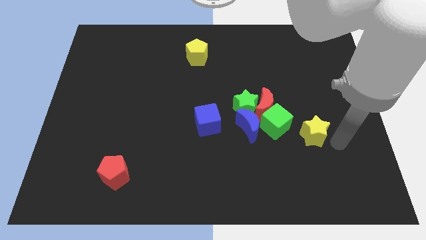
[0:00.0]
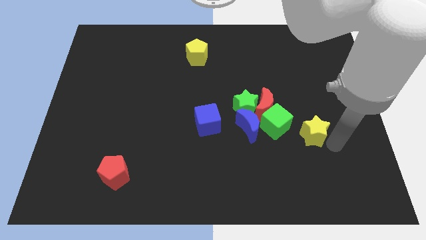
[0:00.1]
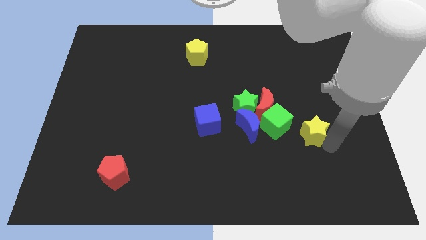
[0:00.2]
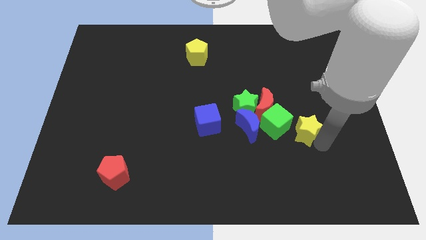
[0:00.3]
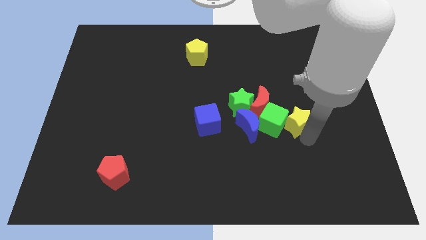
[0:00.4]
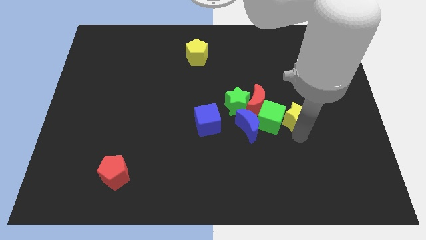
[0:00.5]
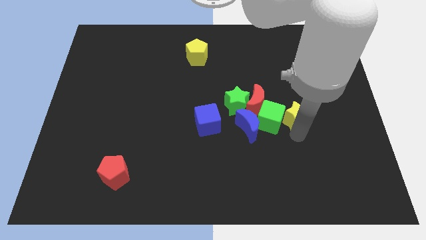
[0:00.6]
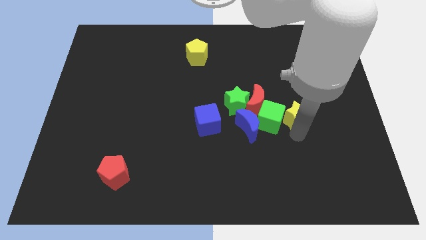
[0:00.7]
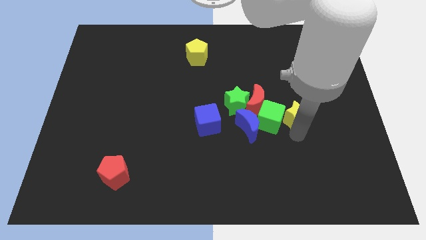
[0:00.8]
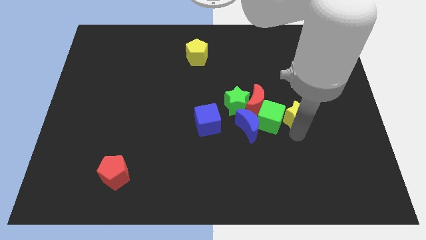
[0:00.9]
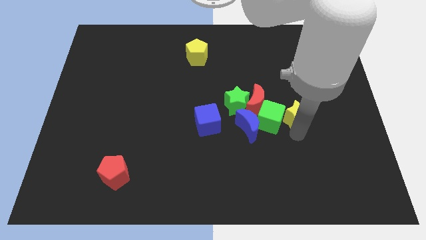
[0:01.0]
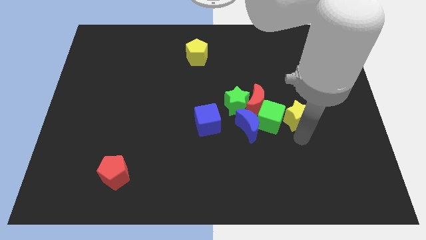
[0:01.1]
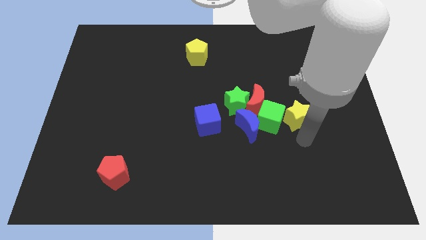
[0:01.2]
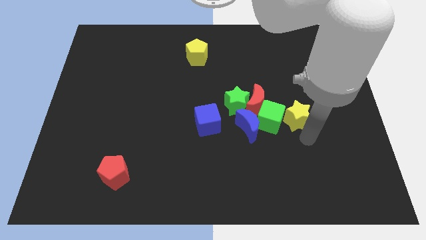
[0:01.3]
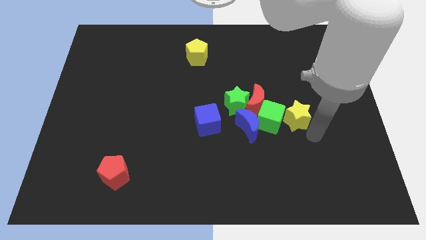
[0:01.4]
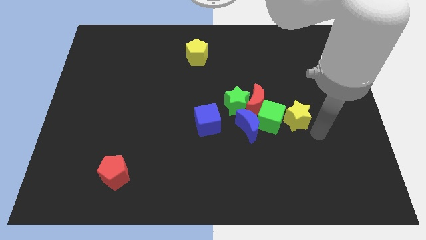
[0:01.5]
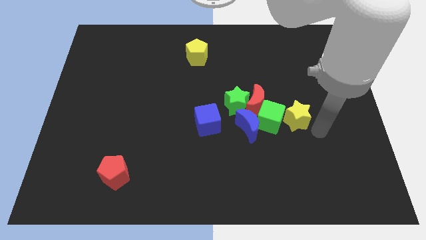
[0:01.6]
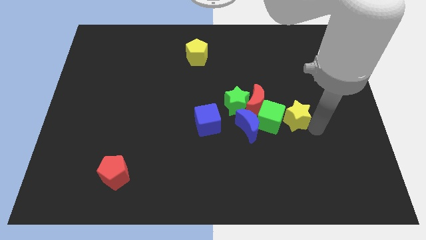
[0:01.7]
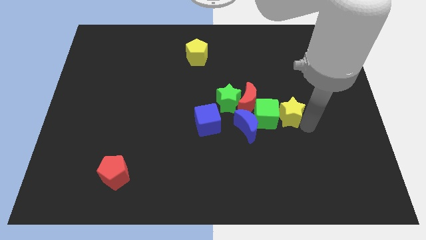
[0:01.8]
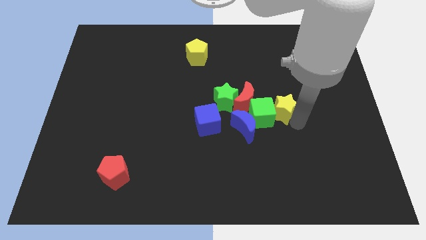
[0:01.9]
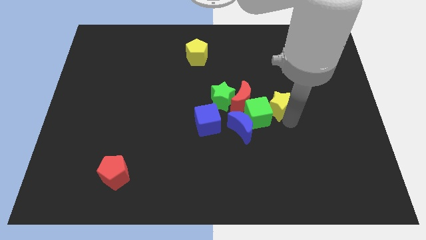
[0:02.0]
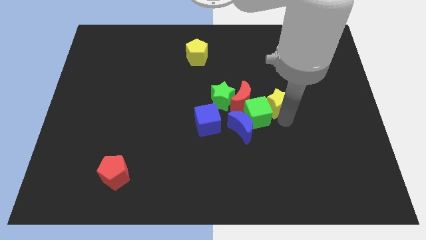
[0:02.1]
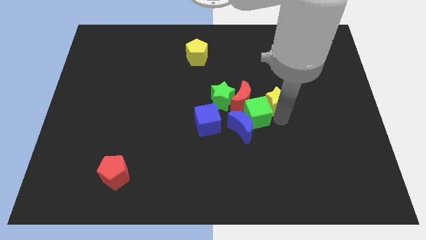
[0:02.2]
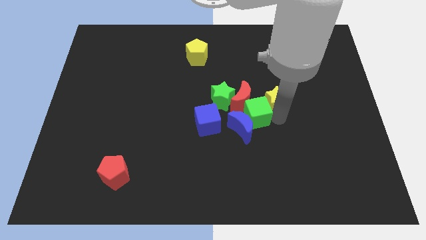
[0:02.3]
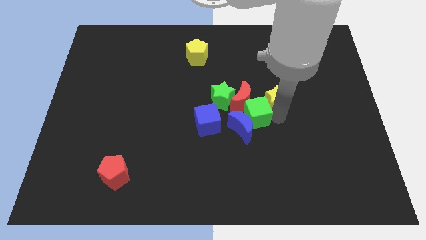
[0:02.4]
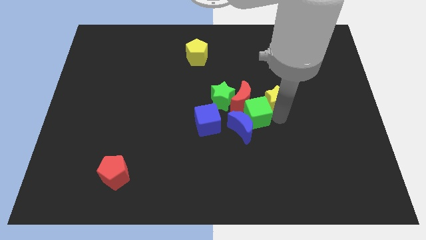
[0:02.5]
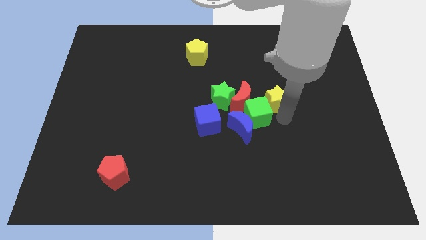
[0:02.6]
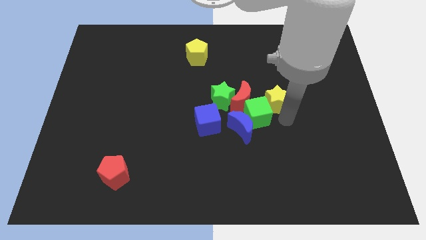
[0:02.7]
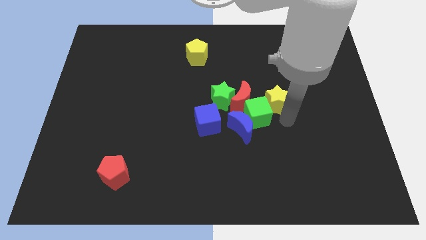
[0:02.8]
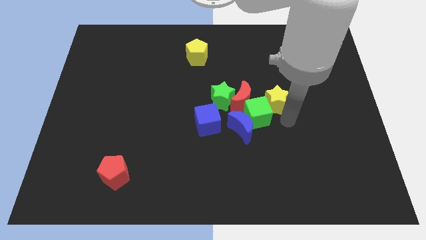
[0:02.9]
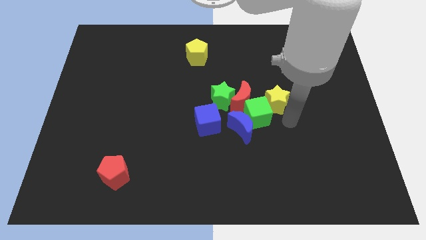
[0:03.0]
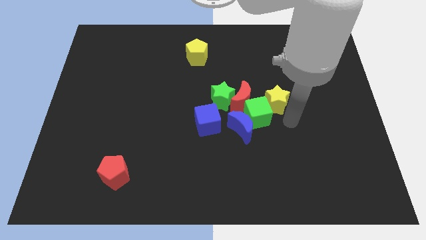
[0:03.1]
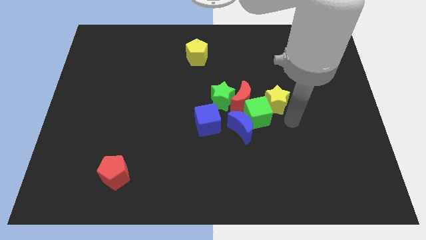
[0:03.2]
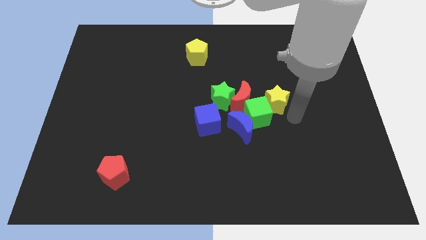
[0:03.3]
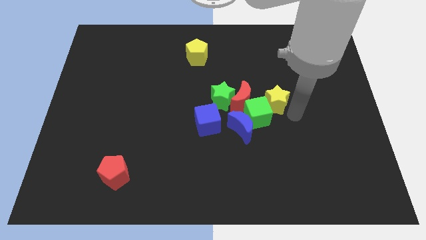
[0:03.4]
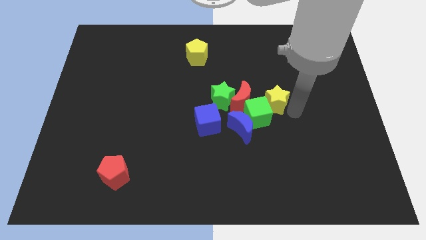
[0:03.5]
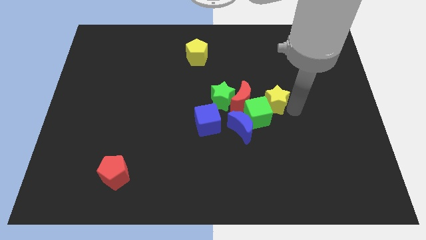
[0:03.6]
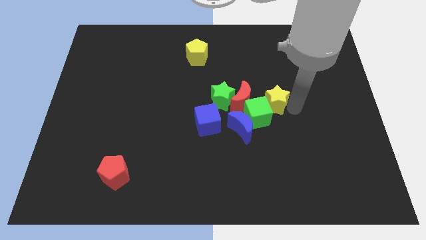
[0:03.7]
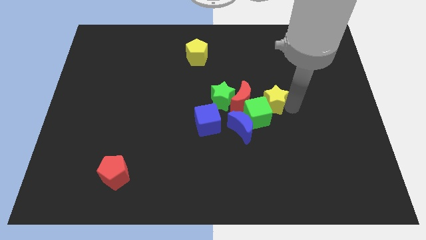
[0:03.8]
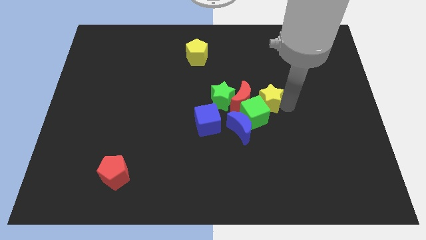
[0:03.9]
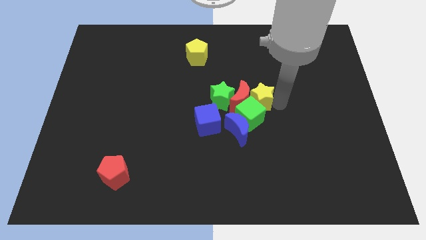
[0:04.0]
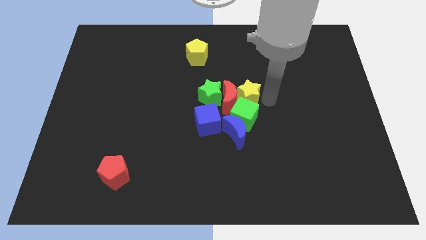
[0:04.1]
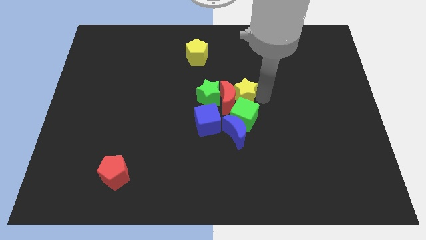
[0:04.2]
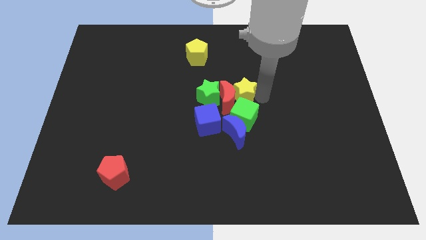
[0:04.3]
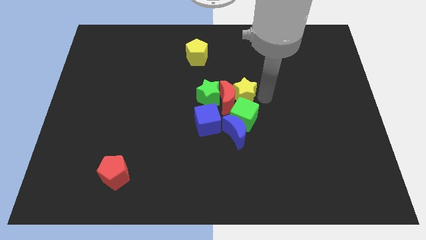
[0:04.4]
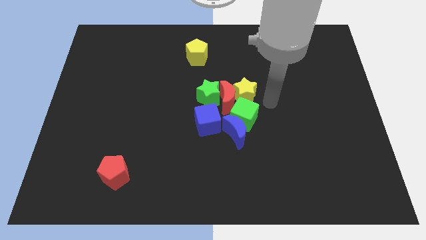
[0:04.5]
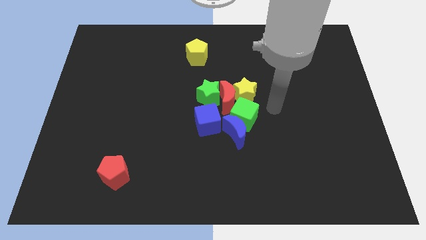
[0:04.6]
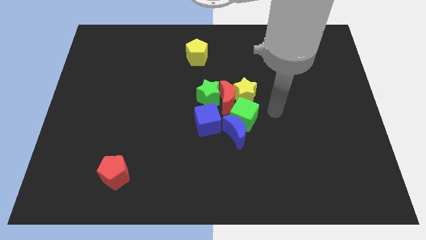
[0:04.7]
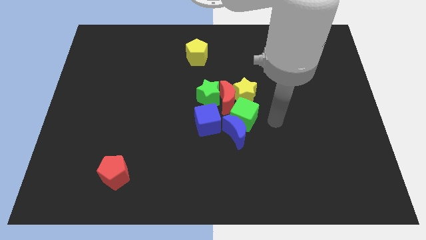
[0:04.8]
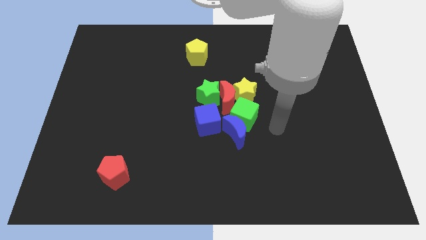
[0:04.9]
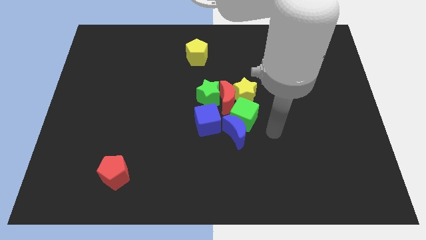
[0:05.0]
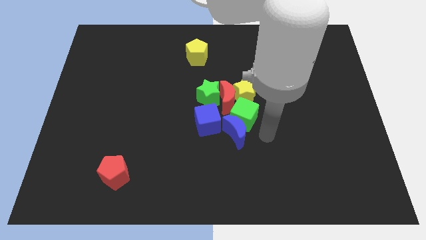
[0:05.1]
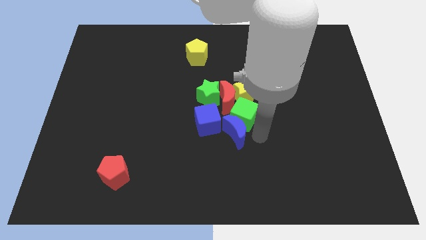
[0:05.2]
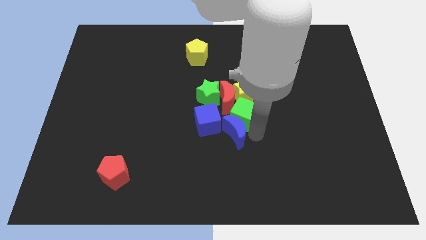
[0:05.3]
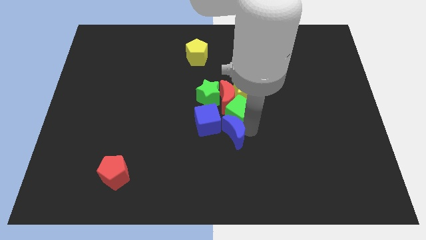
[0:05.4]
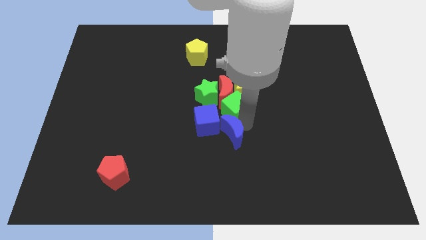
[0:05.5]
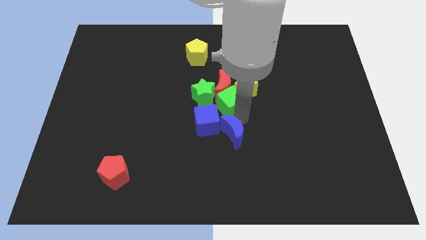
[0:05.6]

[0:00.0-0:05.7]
place your arm close to the green cube

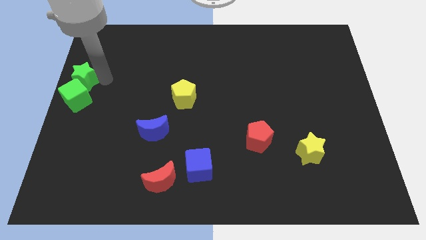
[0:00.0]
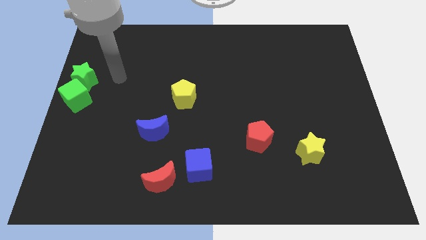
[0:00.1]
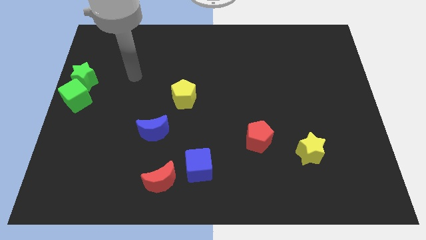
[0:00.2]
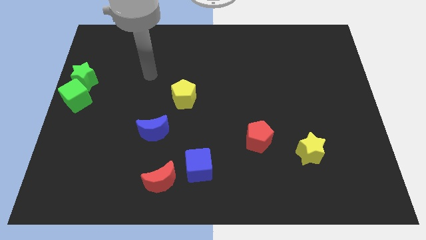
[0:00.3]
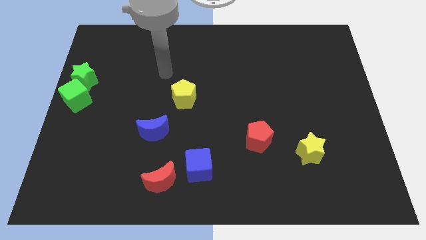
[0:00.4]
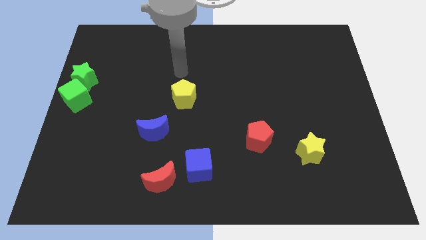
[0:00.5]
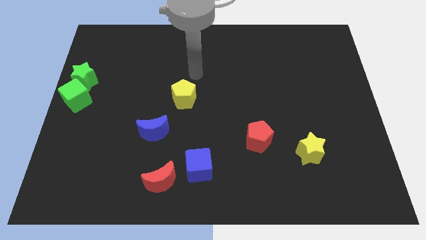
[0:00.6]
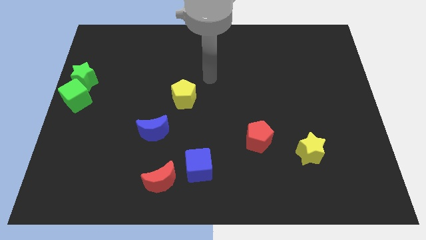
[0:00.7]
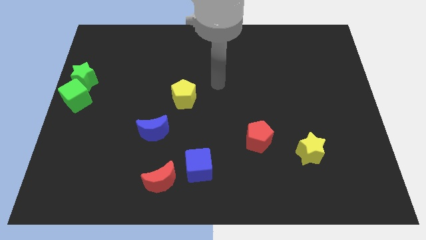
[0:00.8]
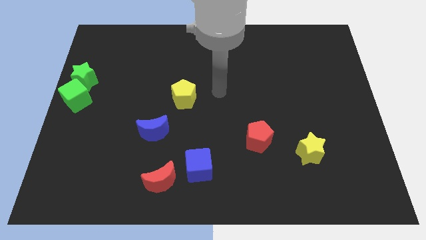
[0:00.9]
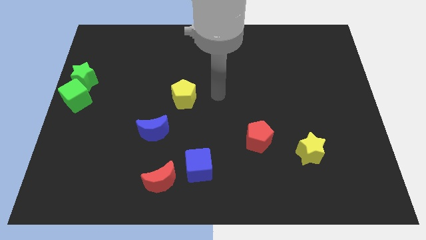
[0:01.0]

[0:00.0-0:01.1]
move your hand away from the green star

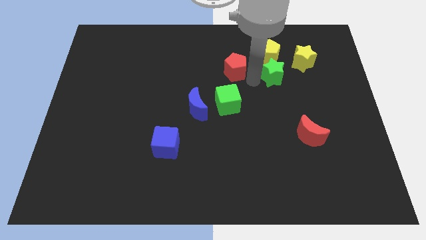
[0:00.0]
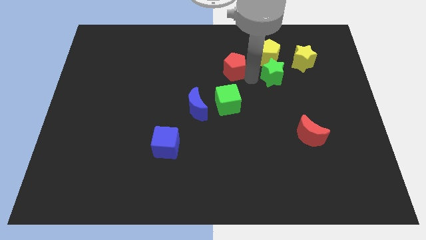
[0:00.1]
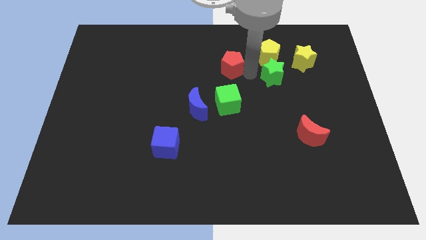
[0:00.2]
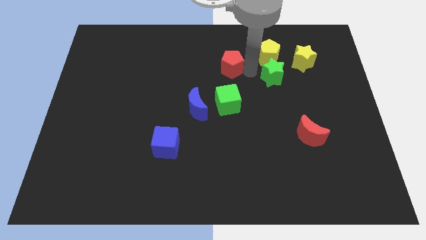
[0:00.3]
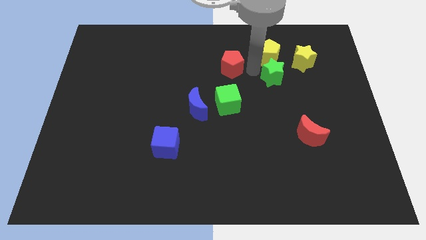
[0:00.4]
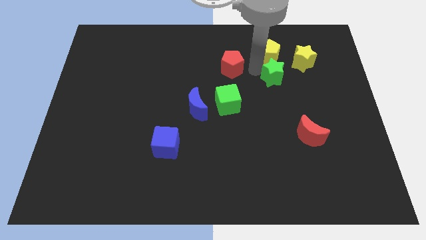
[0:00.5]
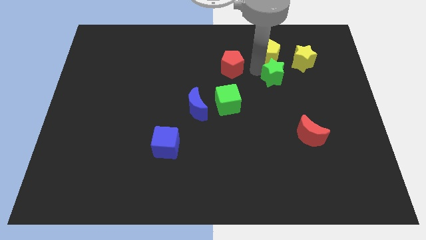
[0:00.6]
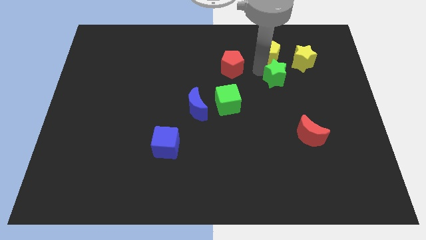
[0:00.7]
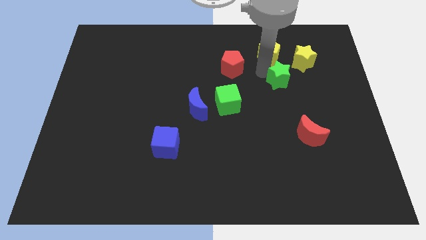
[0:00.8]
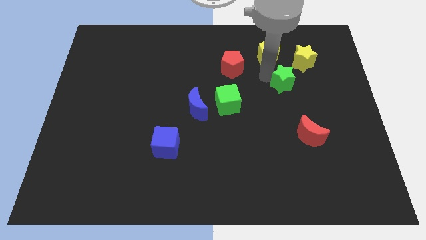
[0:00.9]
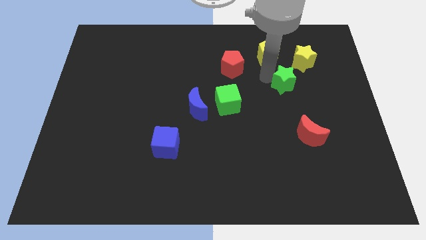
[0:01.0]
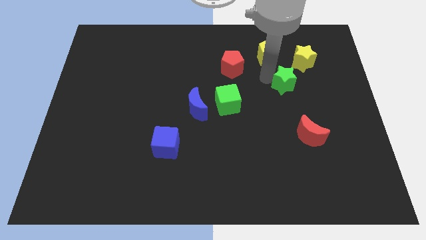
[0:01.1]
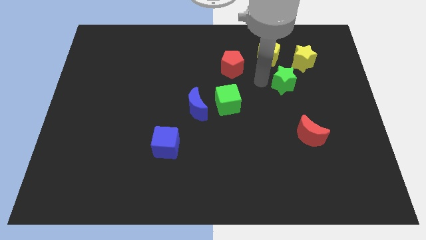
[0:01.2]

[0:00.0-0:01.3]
put the green star at the bottom center of the yellow star and yellow pentagon

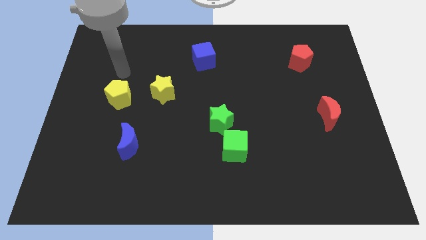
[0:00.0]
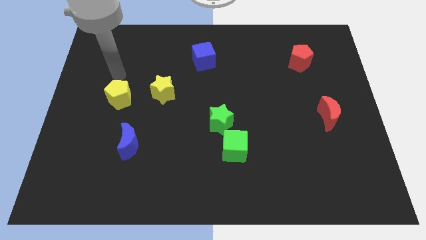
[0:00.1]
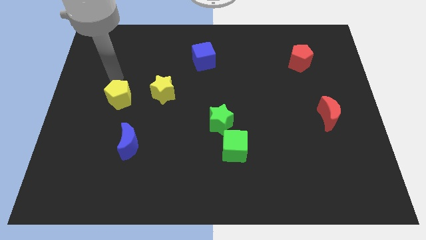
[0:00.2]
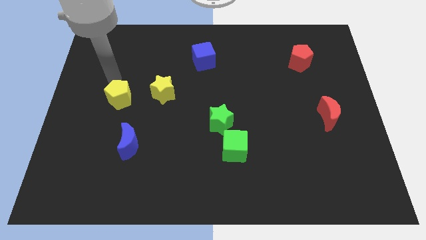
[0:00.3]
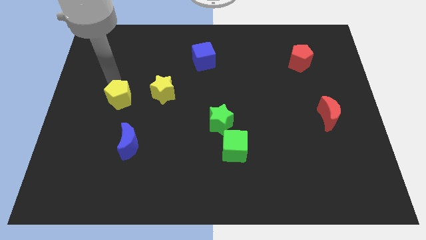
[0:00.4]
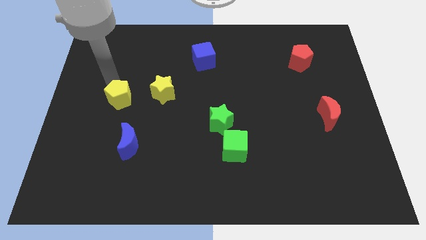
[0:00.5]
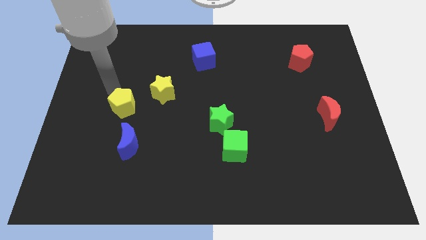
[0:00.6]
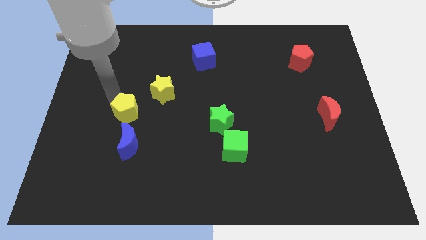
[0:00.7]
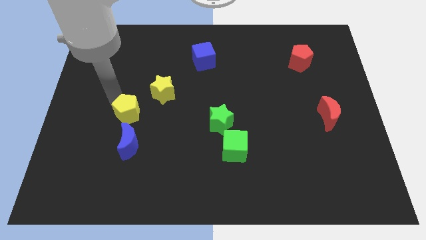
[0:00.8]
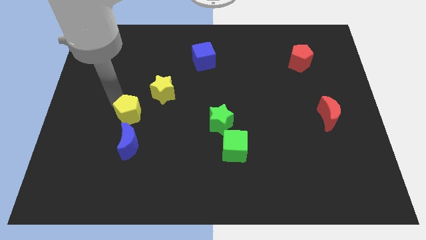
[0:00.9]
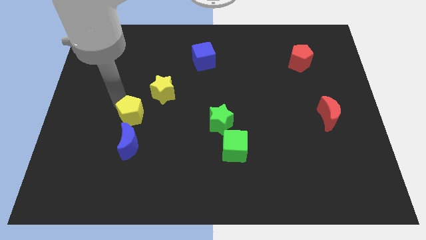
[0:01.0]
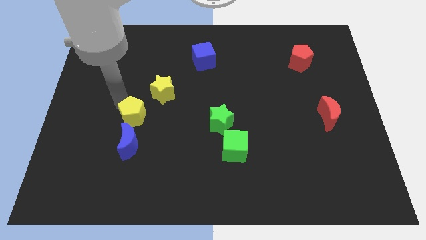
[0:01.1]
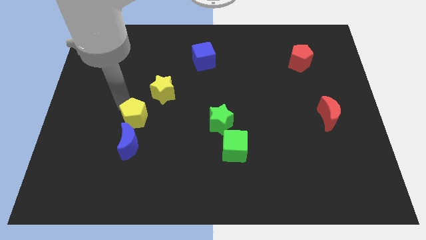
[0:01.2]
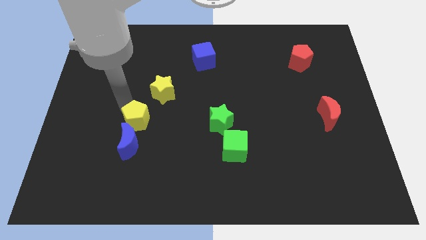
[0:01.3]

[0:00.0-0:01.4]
place yellow pentagon above the blue moon
